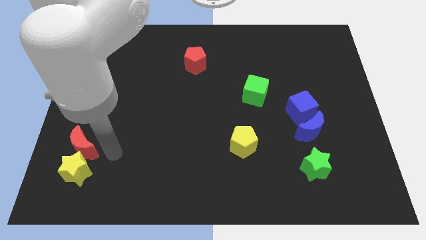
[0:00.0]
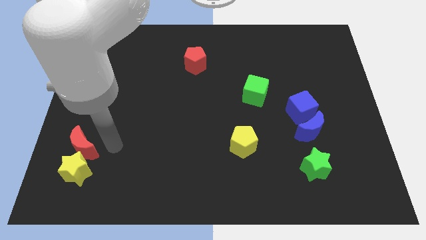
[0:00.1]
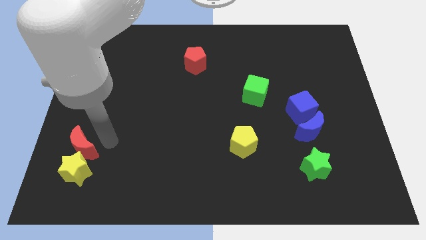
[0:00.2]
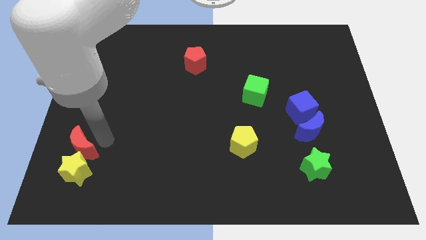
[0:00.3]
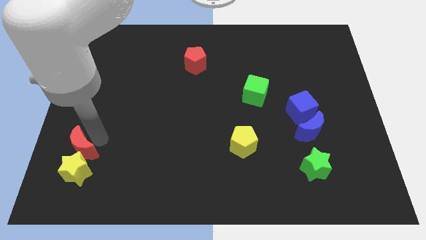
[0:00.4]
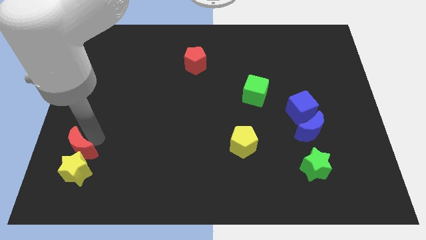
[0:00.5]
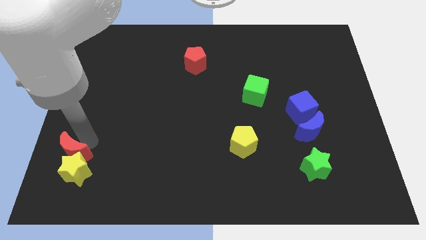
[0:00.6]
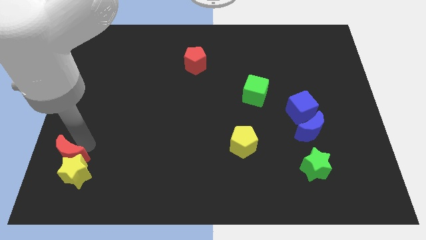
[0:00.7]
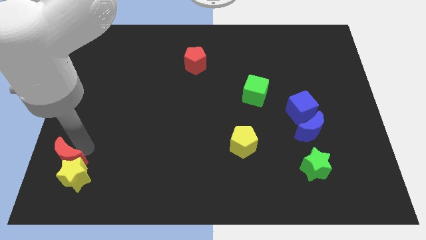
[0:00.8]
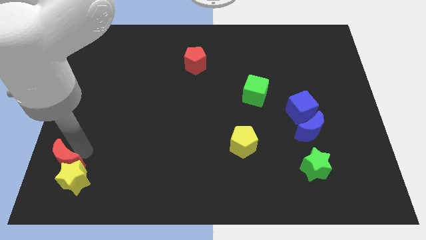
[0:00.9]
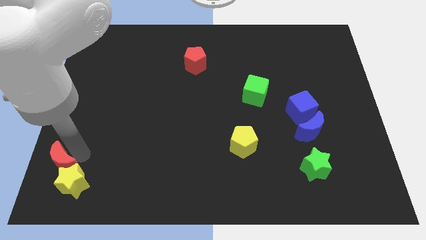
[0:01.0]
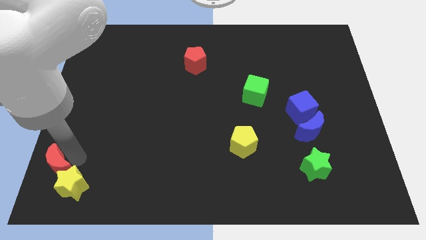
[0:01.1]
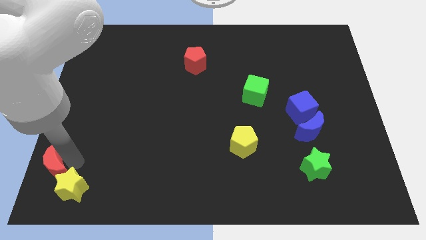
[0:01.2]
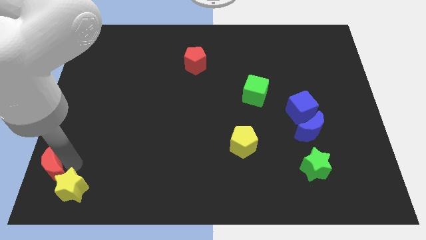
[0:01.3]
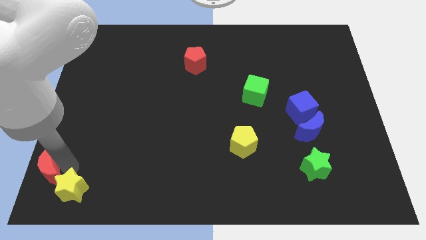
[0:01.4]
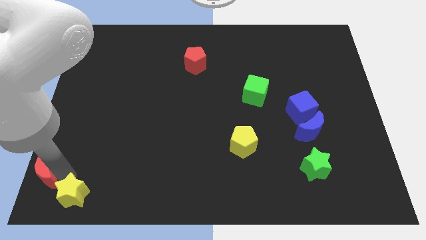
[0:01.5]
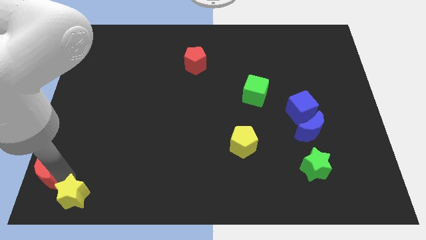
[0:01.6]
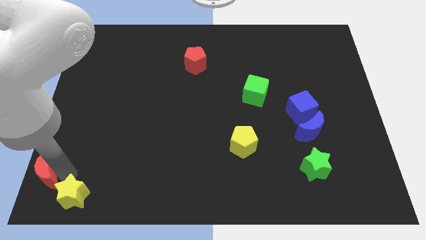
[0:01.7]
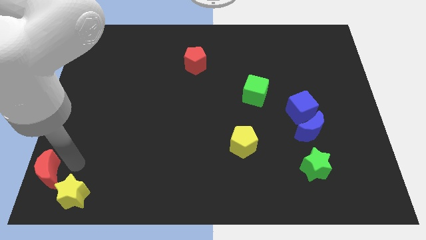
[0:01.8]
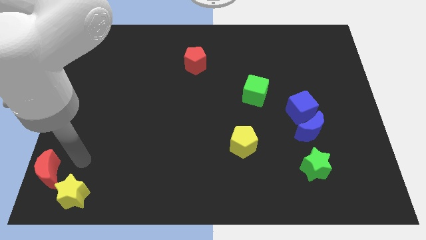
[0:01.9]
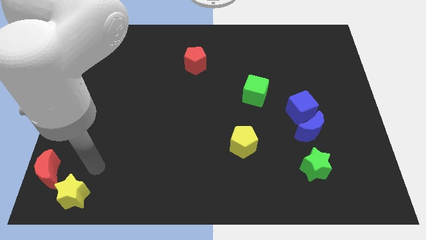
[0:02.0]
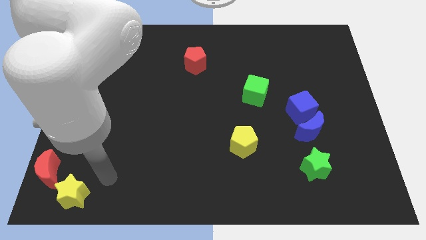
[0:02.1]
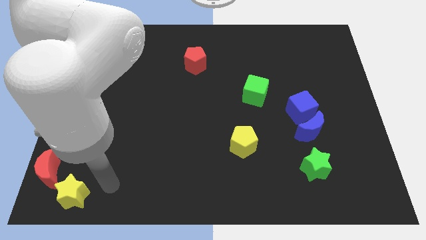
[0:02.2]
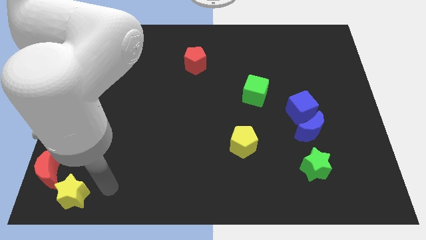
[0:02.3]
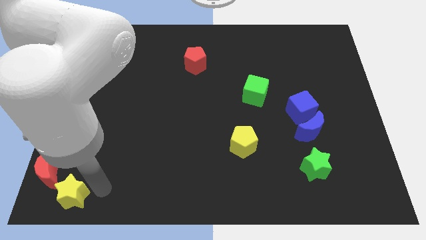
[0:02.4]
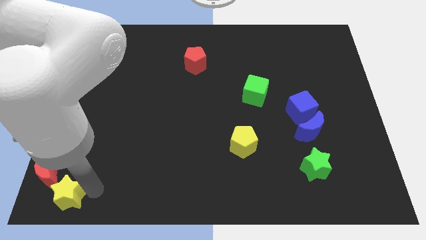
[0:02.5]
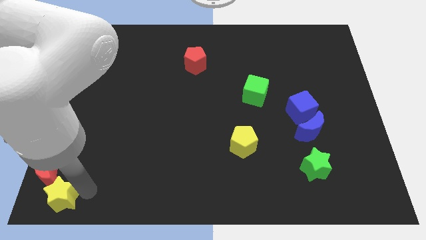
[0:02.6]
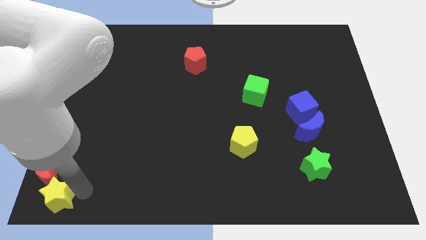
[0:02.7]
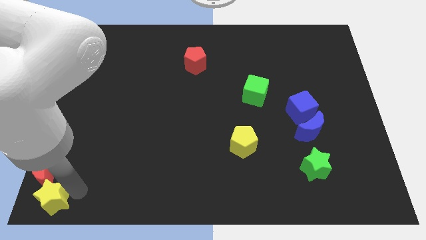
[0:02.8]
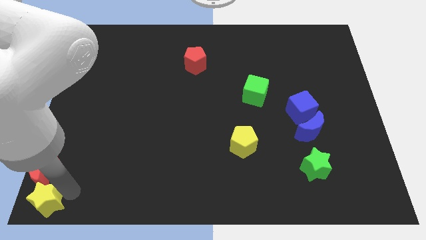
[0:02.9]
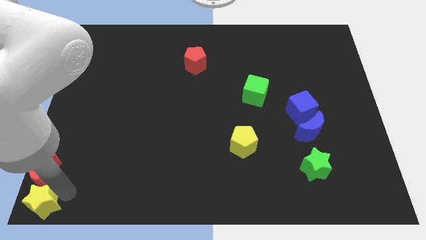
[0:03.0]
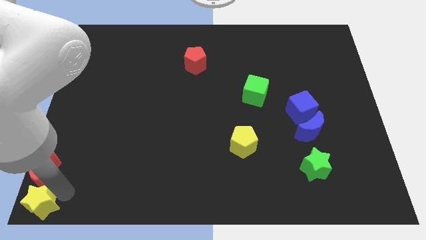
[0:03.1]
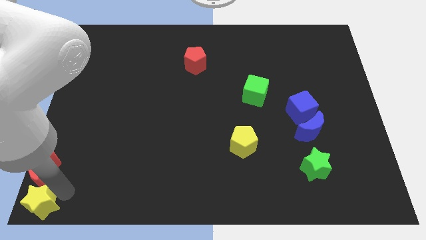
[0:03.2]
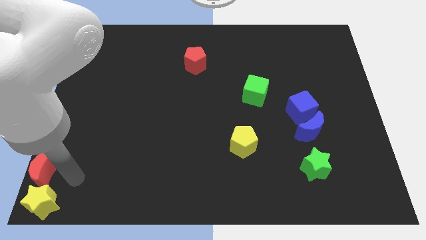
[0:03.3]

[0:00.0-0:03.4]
place the red crescent and yellow star at the bottom left

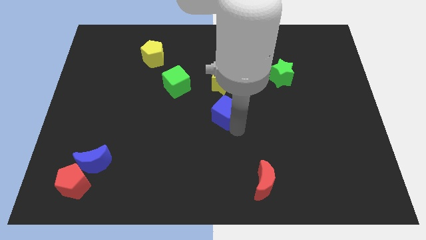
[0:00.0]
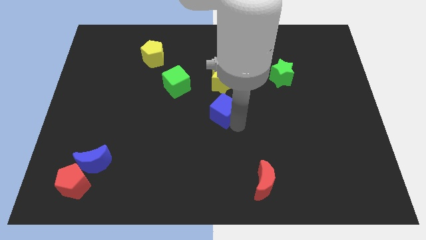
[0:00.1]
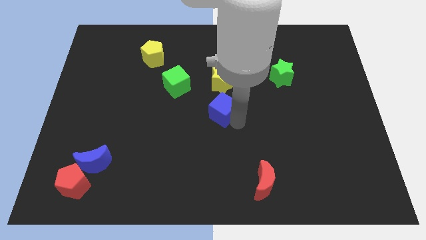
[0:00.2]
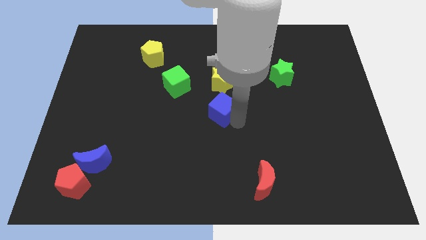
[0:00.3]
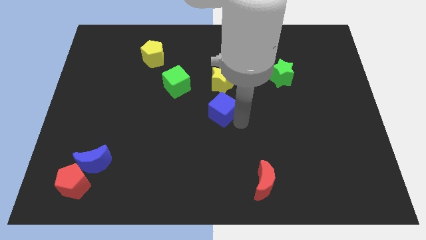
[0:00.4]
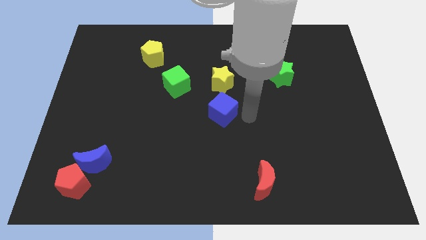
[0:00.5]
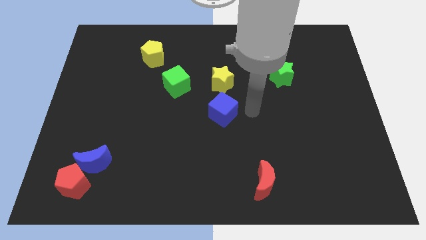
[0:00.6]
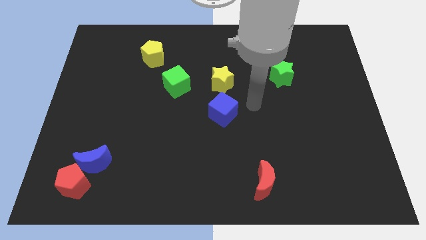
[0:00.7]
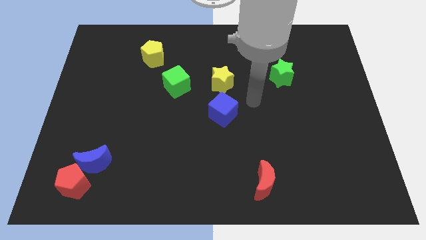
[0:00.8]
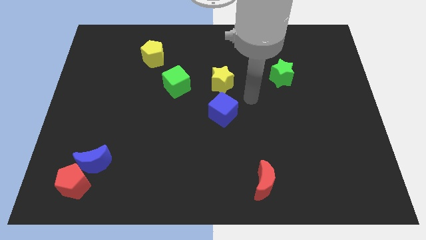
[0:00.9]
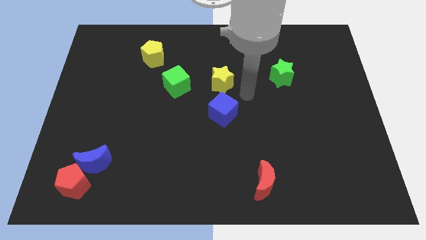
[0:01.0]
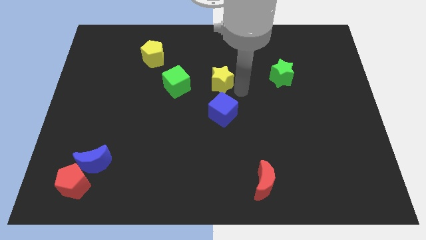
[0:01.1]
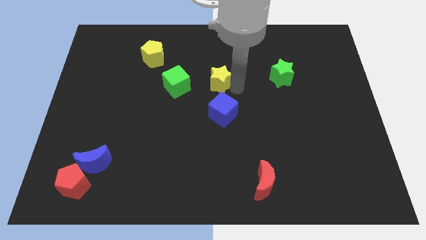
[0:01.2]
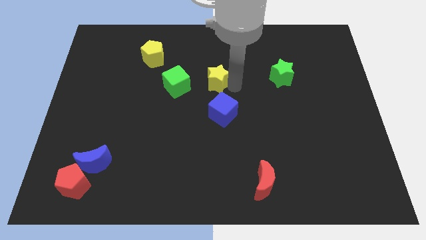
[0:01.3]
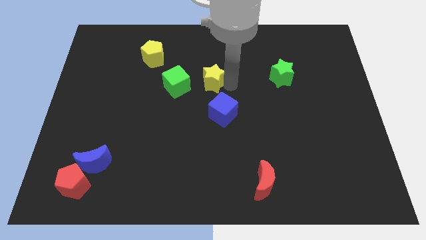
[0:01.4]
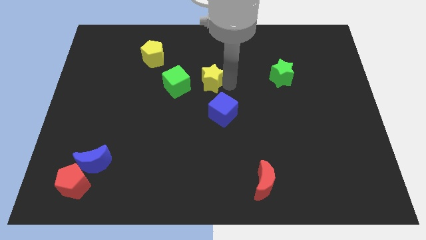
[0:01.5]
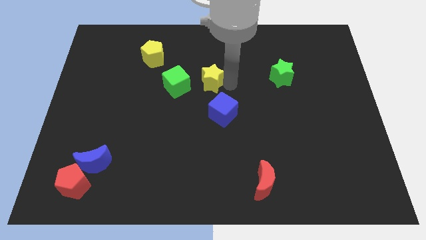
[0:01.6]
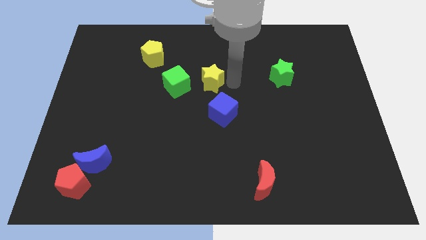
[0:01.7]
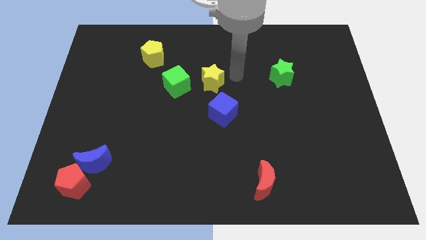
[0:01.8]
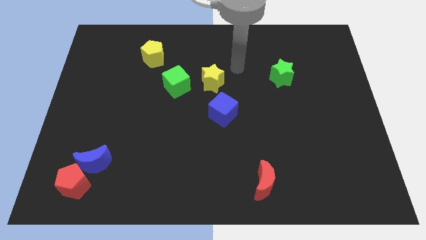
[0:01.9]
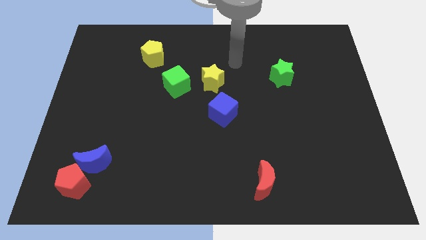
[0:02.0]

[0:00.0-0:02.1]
slightly move the yellow star to the right side of the green cube

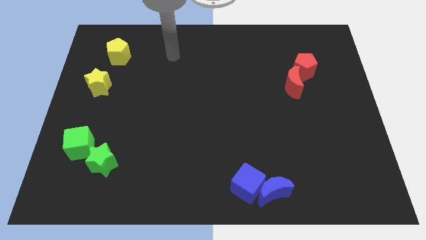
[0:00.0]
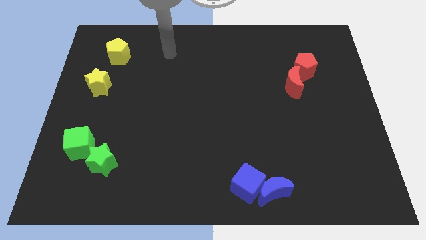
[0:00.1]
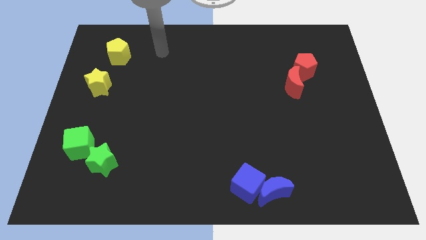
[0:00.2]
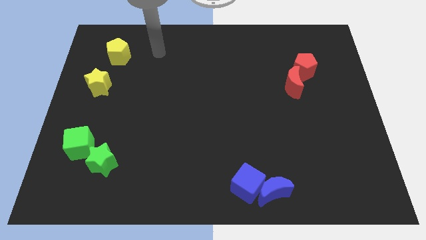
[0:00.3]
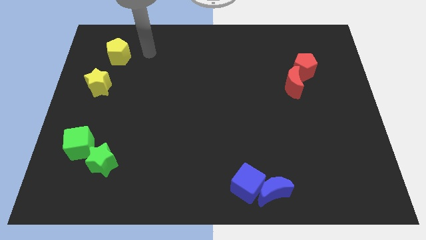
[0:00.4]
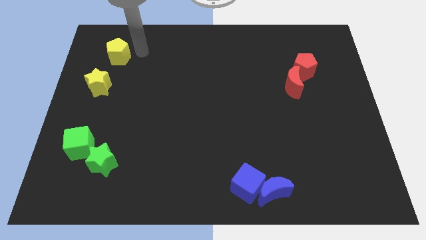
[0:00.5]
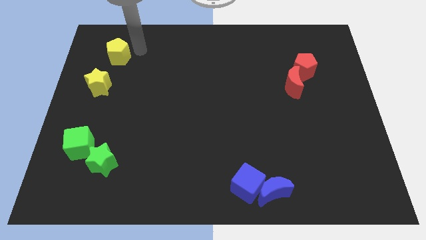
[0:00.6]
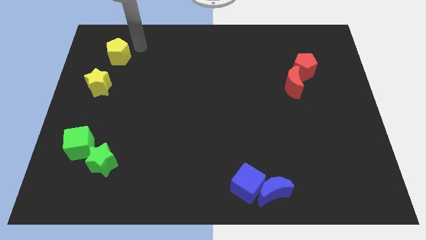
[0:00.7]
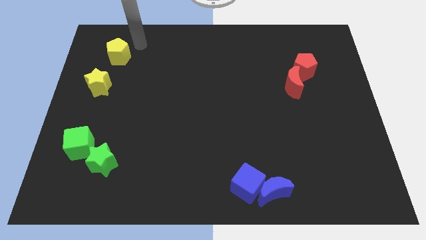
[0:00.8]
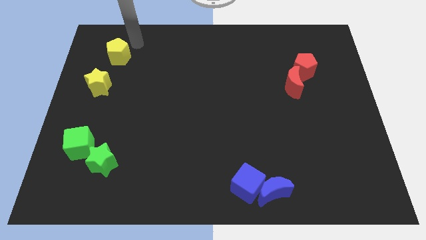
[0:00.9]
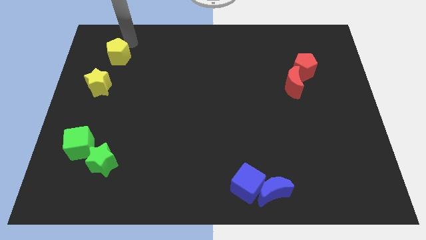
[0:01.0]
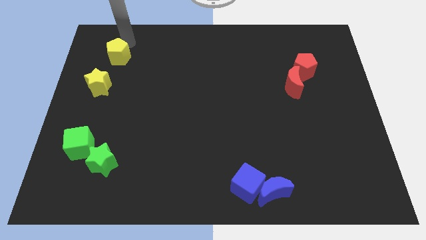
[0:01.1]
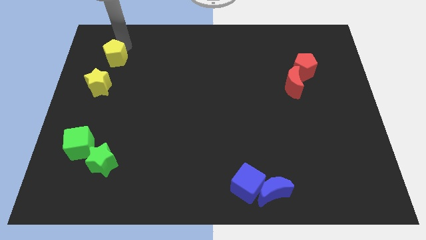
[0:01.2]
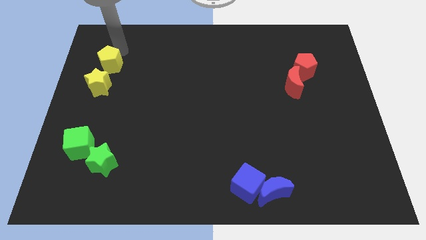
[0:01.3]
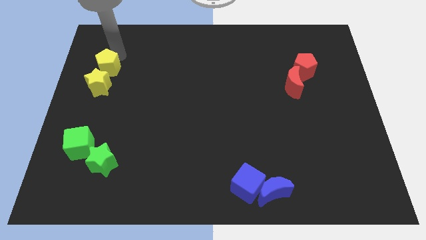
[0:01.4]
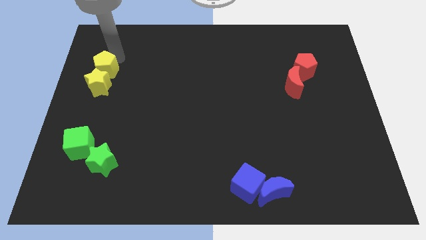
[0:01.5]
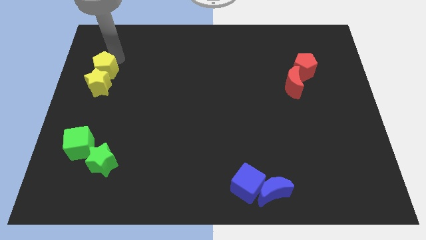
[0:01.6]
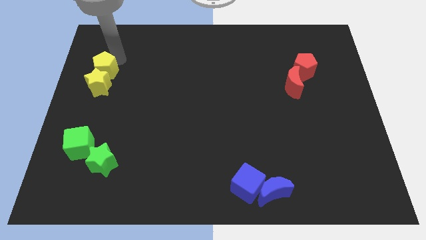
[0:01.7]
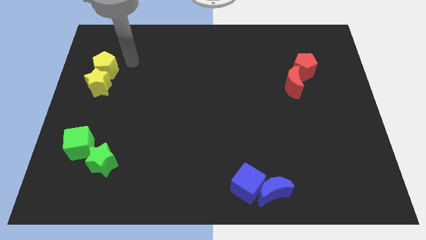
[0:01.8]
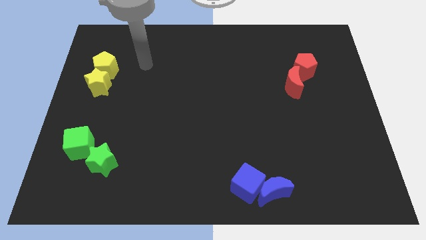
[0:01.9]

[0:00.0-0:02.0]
push yellow pentagon above the yellow star

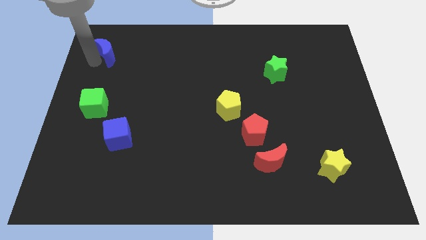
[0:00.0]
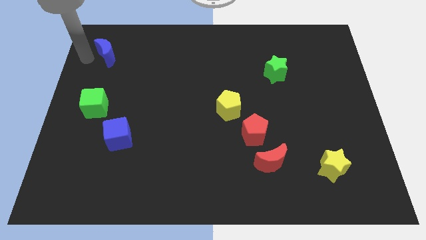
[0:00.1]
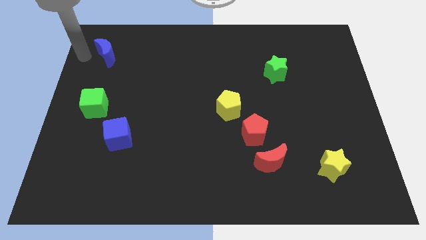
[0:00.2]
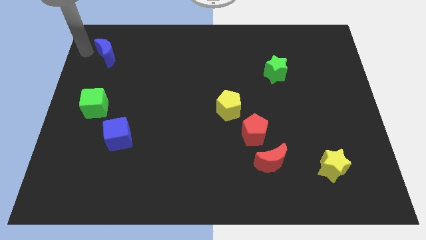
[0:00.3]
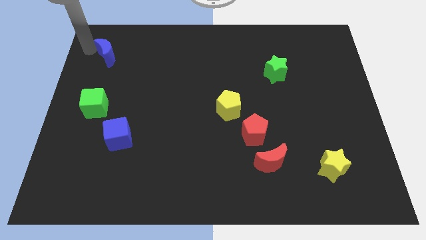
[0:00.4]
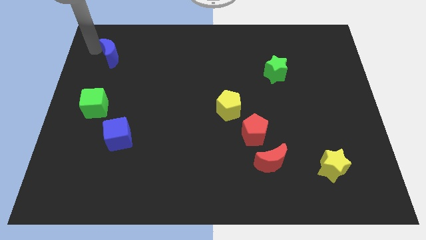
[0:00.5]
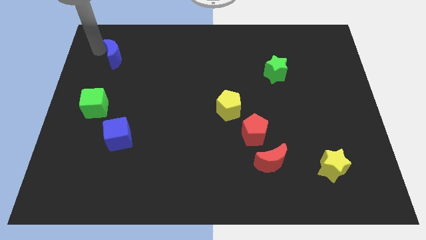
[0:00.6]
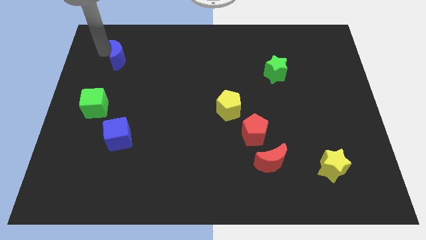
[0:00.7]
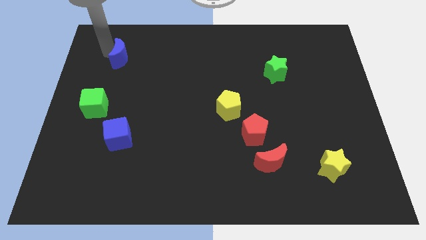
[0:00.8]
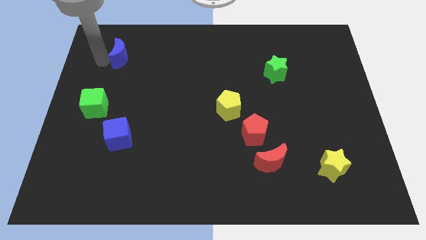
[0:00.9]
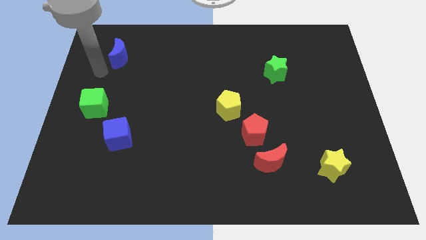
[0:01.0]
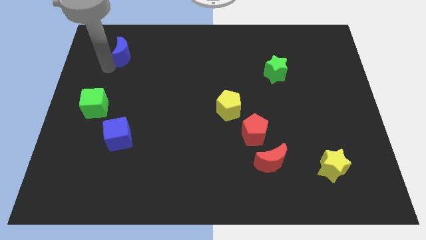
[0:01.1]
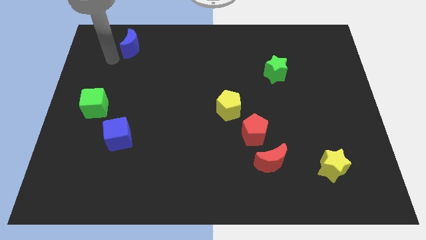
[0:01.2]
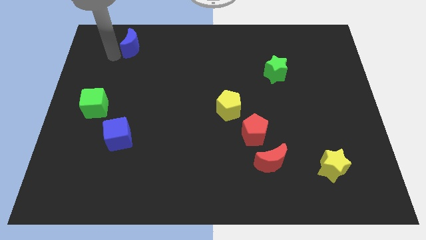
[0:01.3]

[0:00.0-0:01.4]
push blue moon towards the top of the board

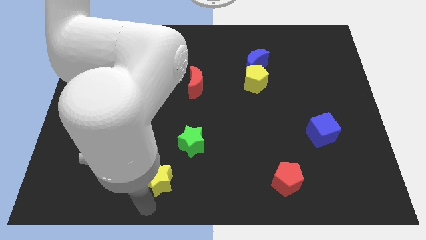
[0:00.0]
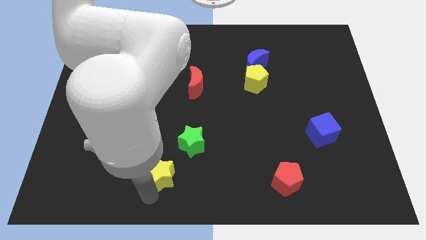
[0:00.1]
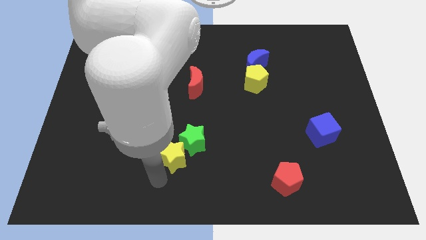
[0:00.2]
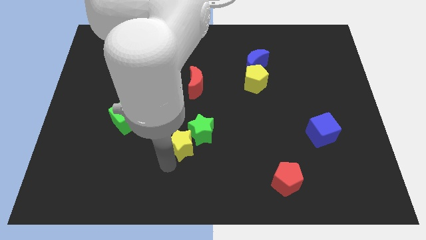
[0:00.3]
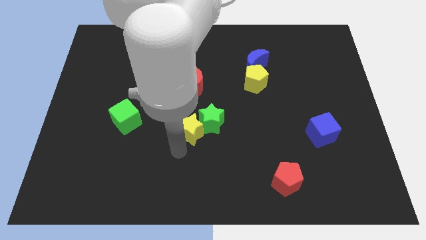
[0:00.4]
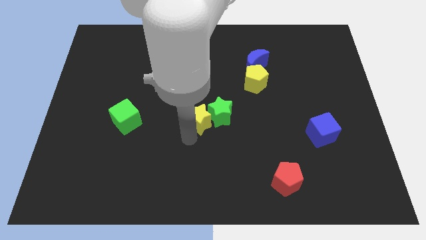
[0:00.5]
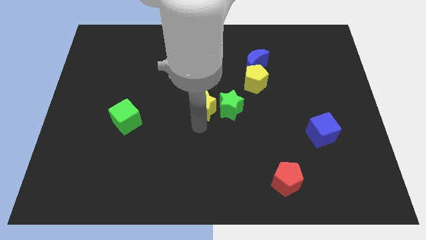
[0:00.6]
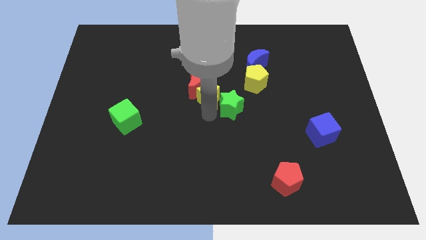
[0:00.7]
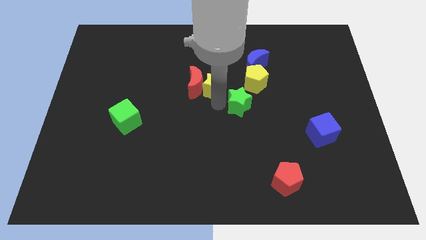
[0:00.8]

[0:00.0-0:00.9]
push yellow and green star towards the center of the board
